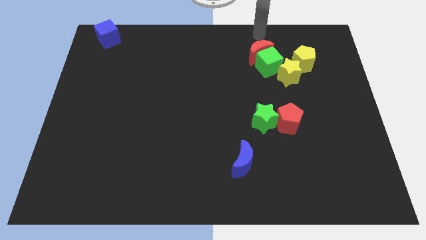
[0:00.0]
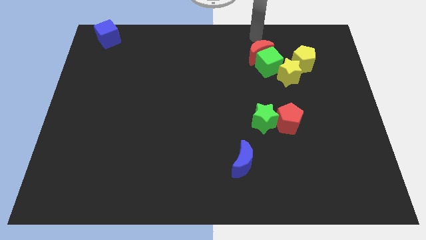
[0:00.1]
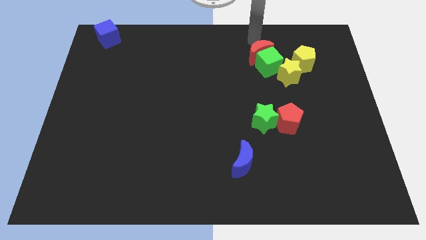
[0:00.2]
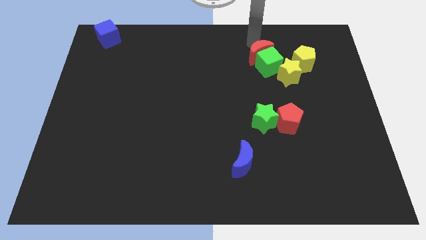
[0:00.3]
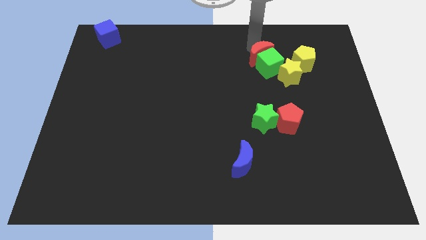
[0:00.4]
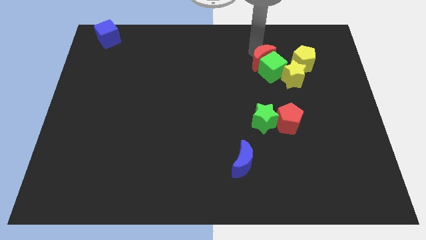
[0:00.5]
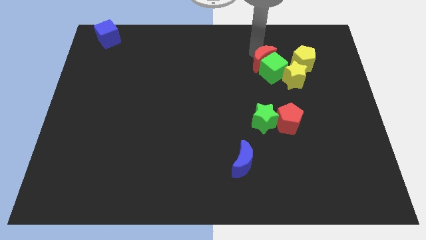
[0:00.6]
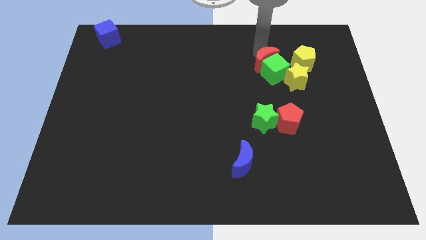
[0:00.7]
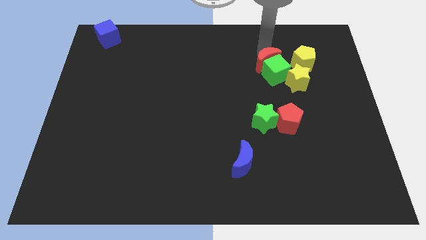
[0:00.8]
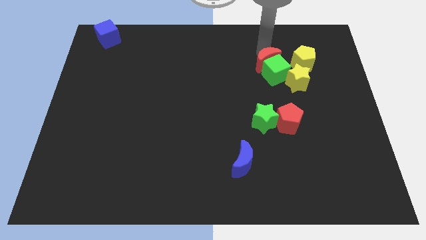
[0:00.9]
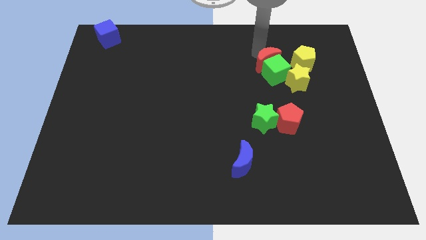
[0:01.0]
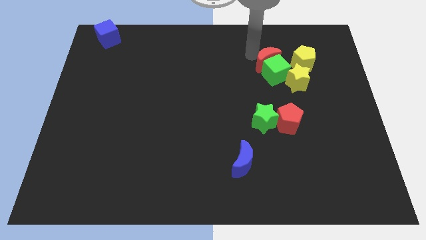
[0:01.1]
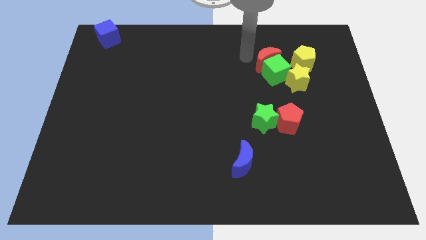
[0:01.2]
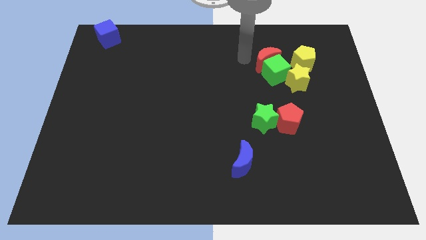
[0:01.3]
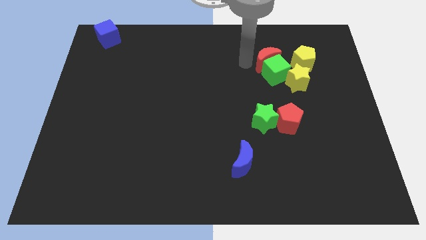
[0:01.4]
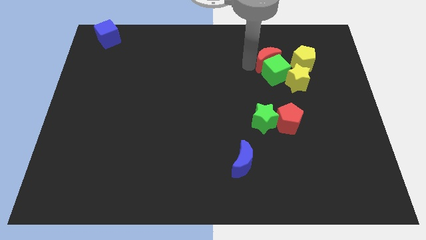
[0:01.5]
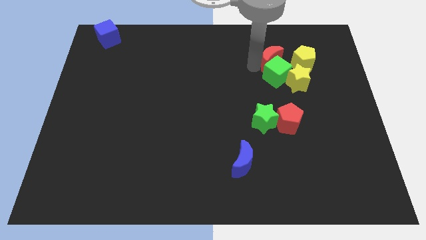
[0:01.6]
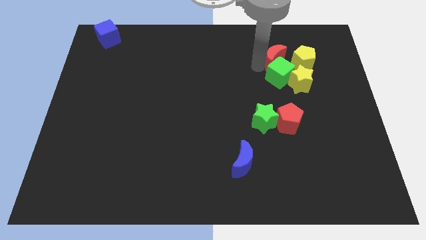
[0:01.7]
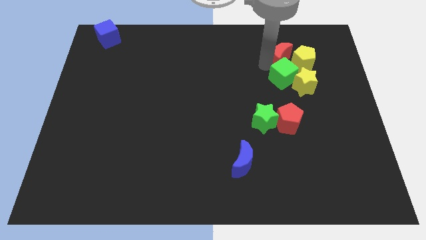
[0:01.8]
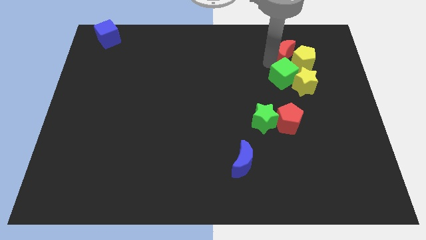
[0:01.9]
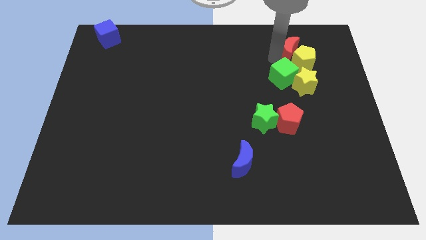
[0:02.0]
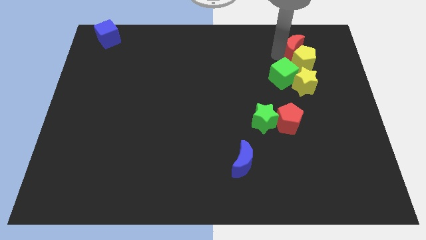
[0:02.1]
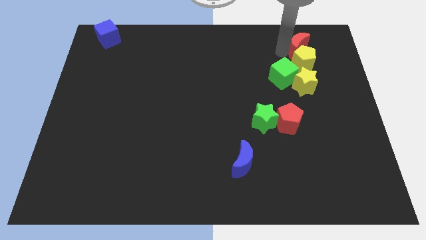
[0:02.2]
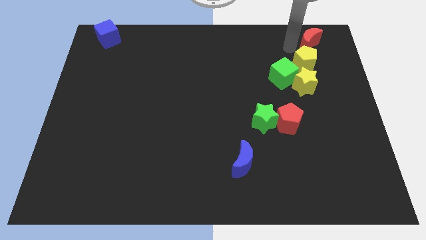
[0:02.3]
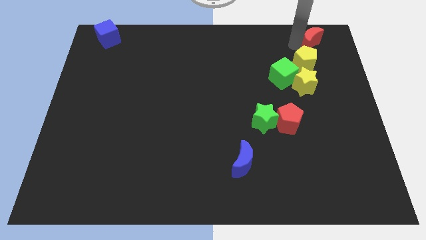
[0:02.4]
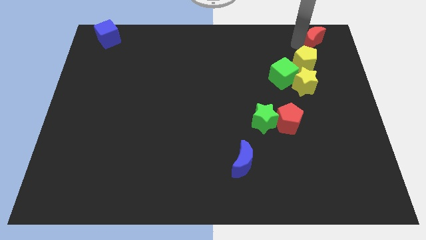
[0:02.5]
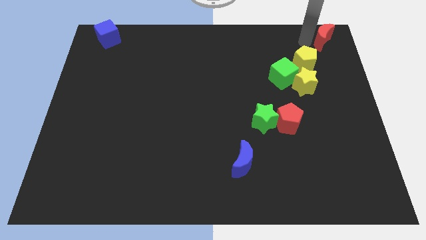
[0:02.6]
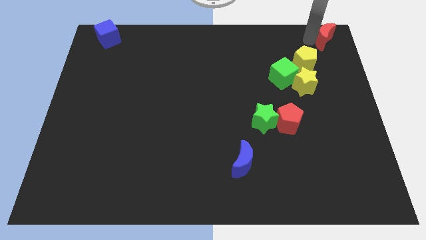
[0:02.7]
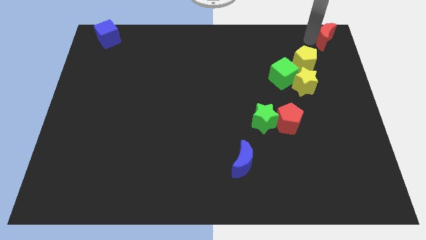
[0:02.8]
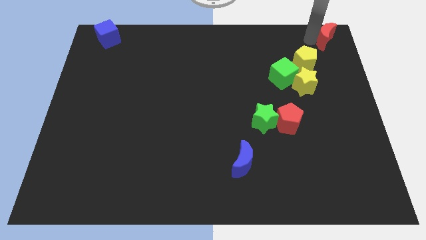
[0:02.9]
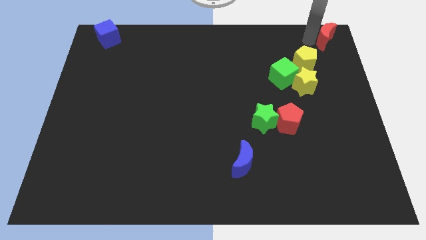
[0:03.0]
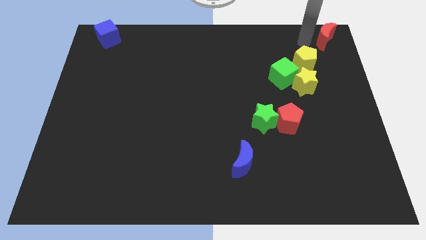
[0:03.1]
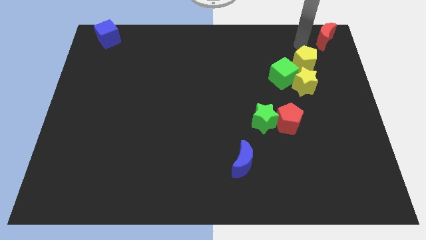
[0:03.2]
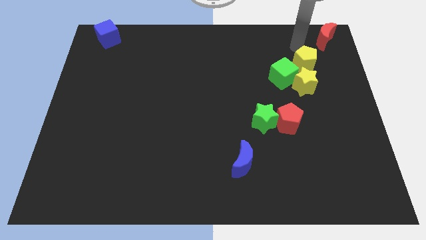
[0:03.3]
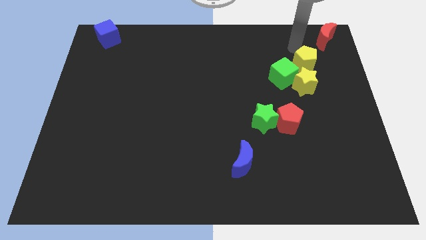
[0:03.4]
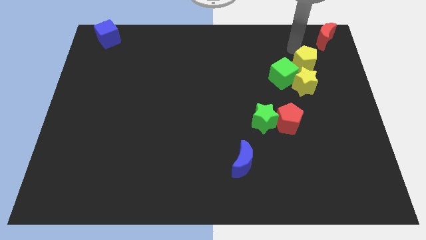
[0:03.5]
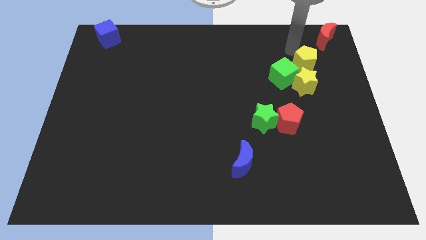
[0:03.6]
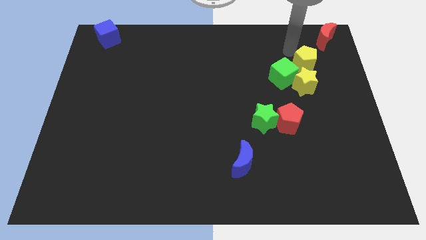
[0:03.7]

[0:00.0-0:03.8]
move the red crecent to the top right corner

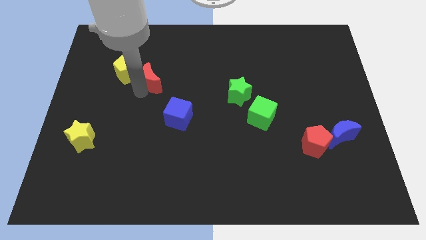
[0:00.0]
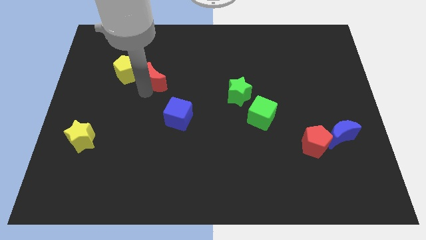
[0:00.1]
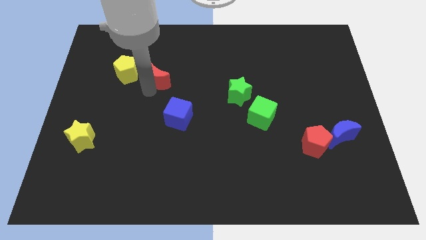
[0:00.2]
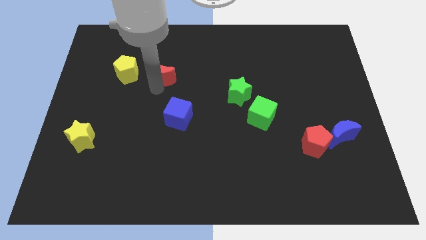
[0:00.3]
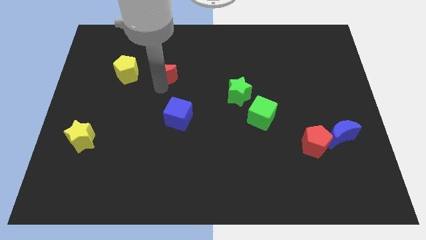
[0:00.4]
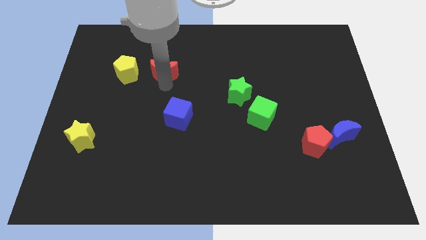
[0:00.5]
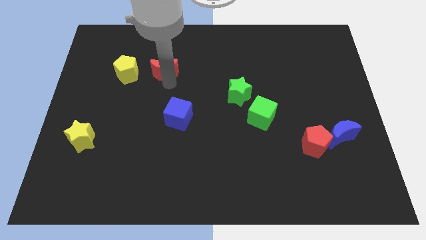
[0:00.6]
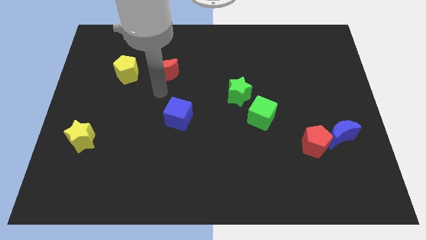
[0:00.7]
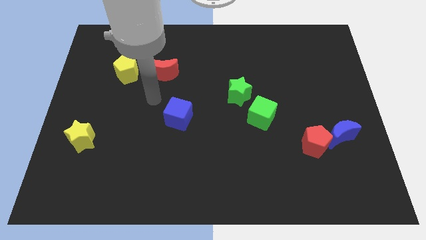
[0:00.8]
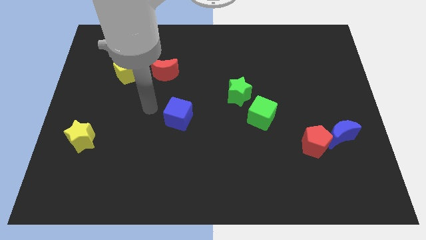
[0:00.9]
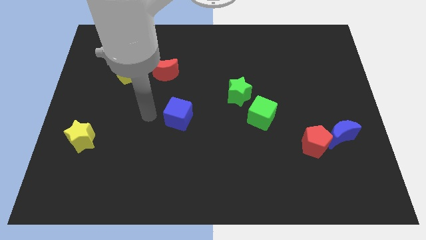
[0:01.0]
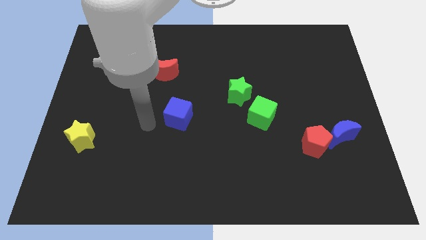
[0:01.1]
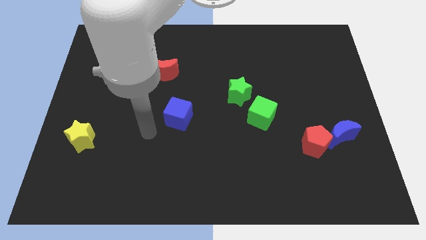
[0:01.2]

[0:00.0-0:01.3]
move the arm to the left of the blue cube

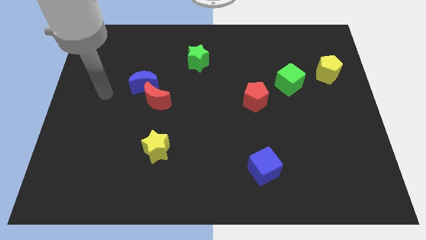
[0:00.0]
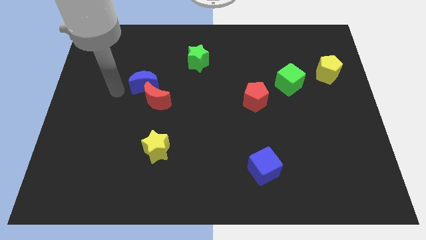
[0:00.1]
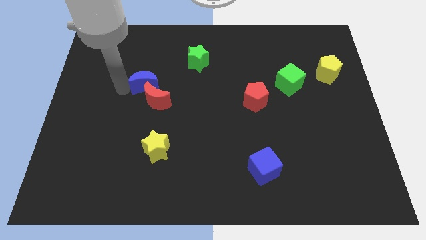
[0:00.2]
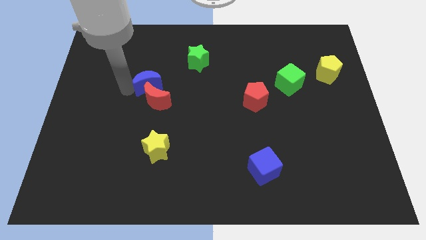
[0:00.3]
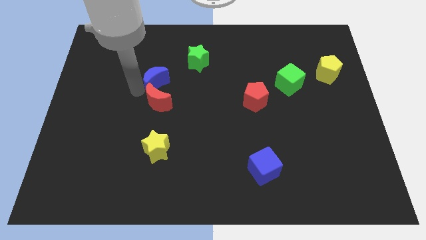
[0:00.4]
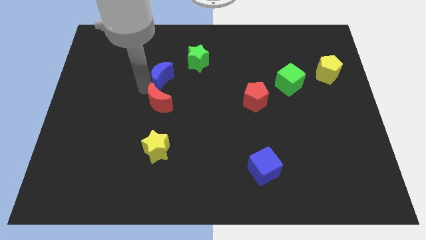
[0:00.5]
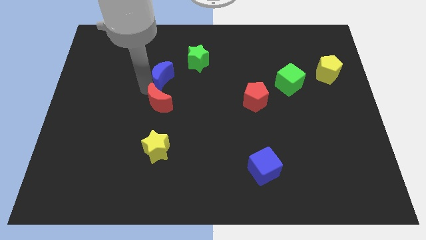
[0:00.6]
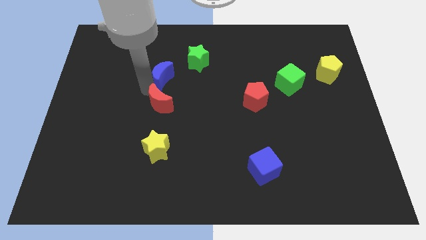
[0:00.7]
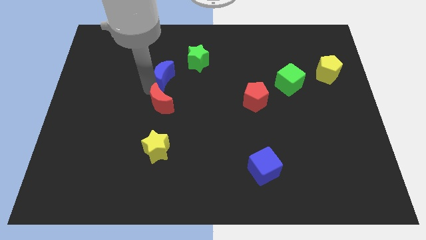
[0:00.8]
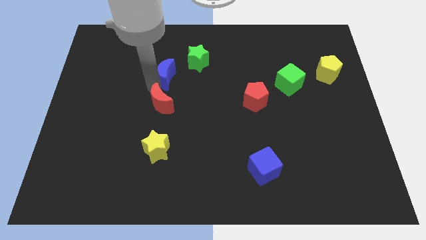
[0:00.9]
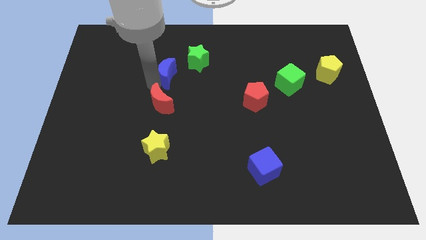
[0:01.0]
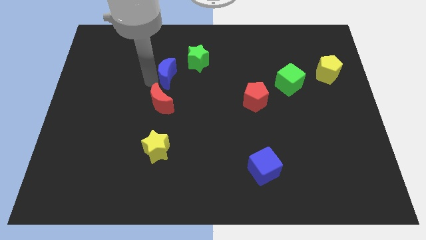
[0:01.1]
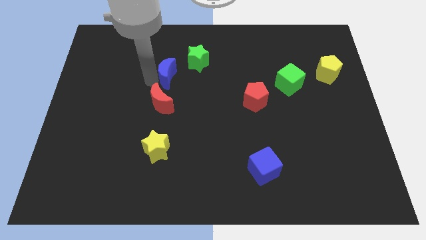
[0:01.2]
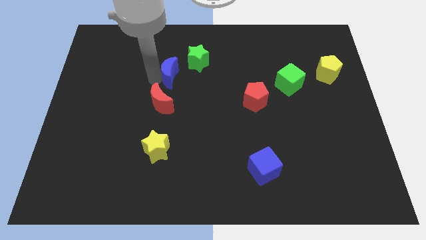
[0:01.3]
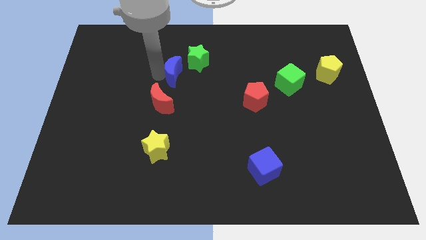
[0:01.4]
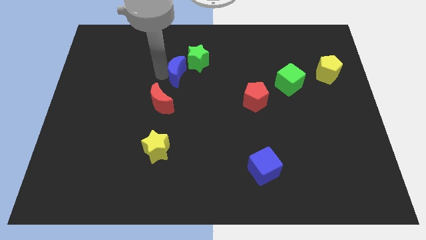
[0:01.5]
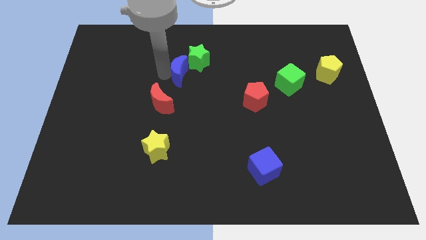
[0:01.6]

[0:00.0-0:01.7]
place the blue crescent at the bottom left of the green star

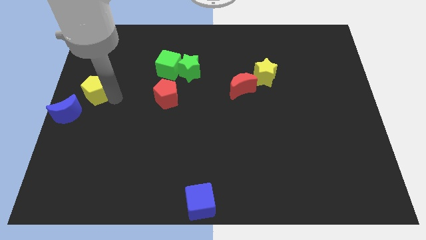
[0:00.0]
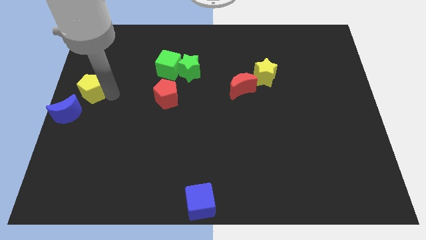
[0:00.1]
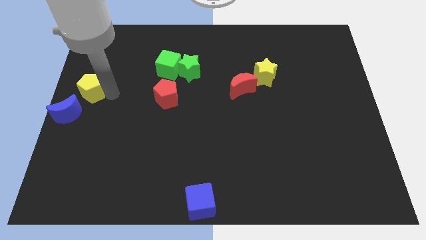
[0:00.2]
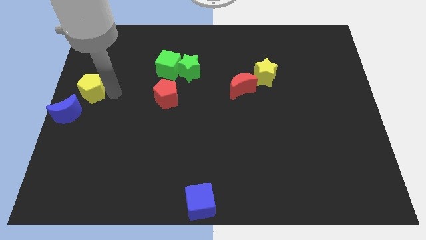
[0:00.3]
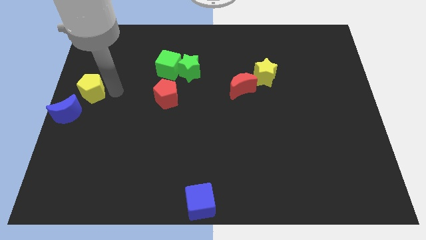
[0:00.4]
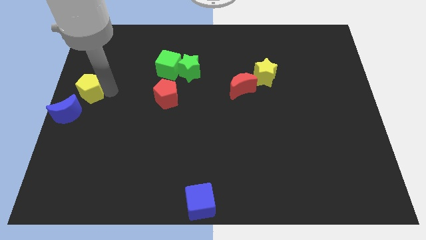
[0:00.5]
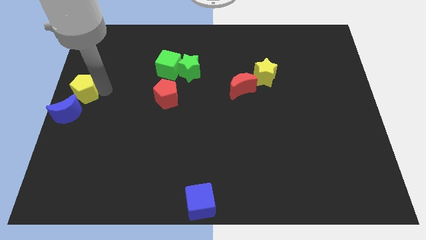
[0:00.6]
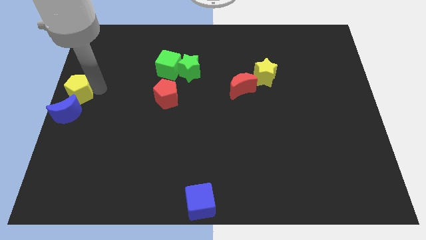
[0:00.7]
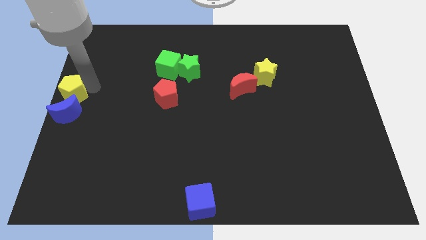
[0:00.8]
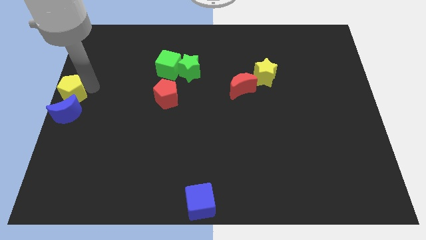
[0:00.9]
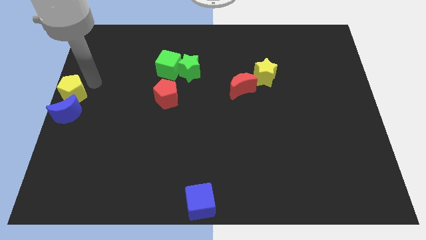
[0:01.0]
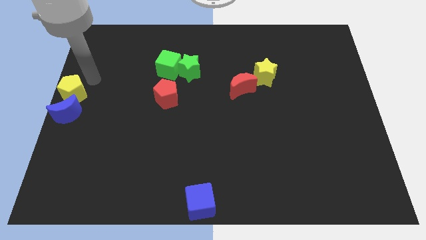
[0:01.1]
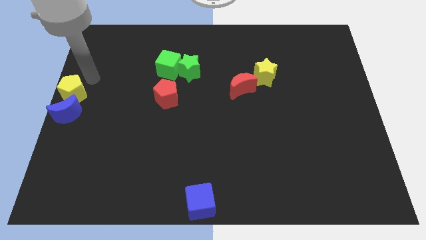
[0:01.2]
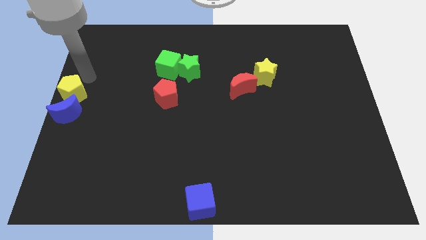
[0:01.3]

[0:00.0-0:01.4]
place the yellow pentagon above the blue moon

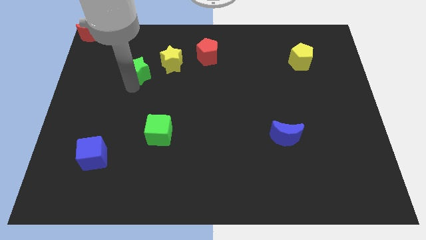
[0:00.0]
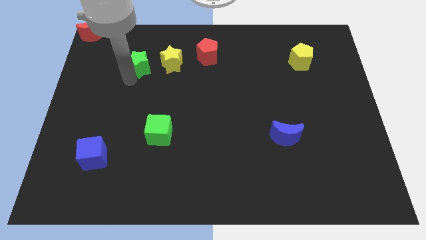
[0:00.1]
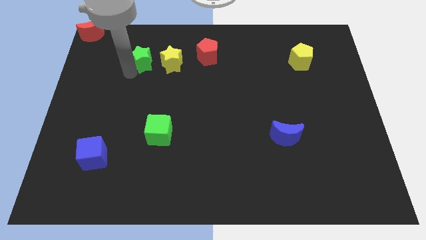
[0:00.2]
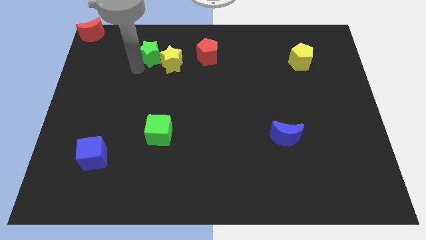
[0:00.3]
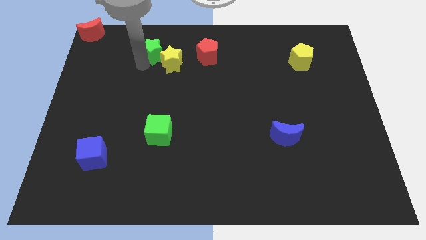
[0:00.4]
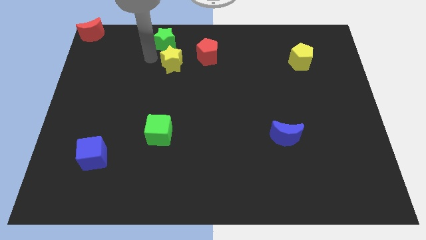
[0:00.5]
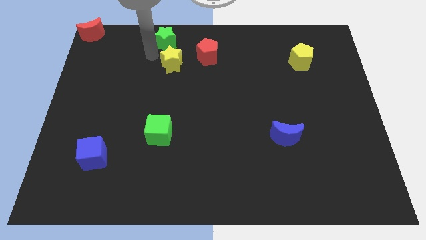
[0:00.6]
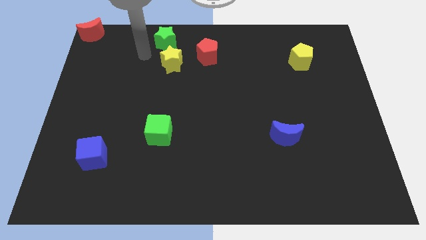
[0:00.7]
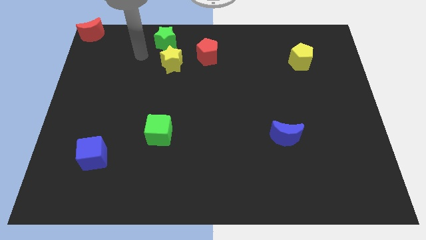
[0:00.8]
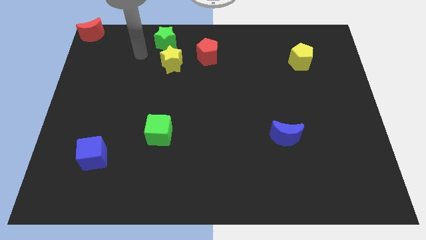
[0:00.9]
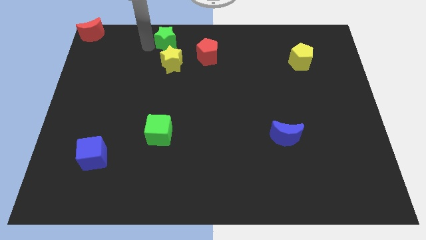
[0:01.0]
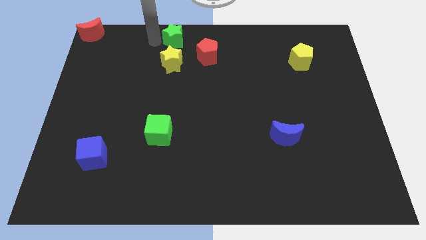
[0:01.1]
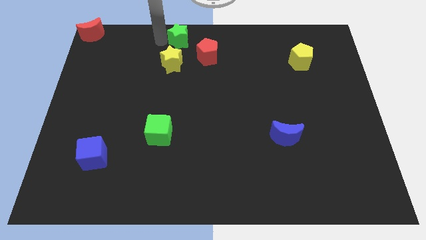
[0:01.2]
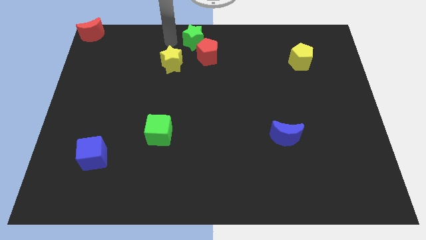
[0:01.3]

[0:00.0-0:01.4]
place the green star above he yellow star
